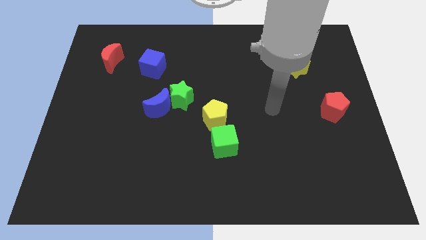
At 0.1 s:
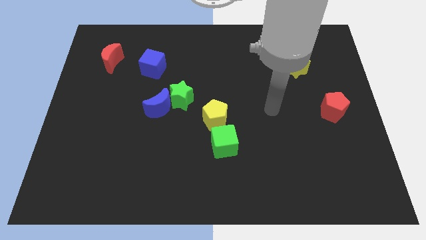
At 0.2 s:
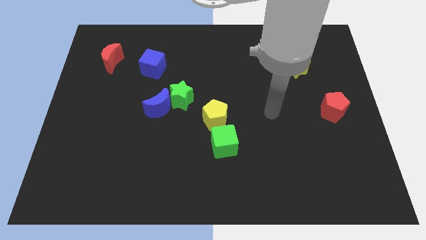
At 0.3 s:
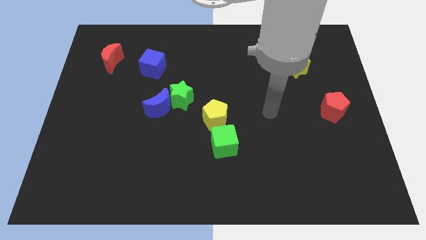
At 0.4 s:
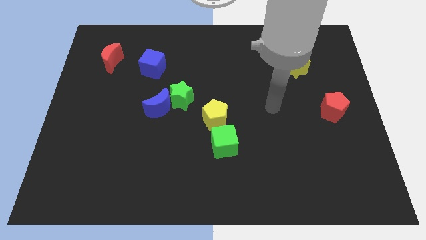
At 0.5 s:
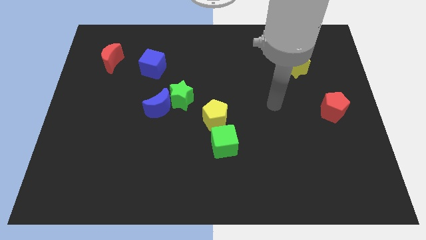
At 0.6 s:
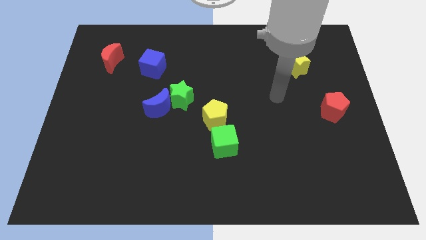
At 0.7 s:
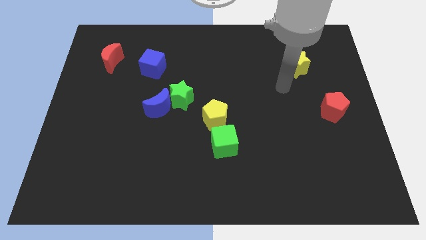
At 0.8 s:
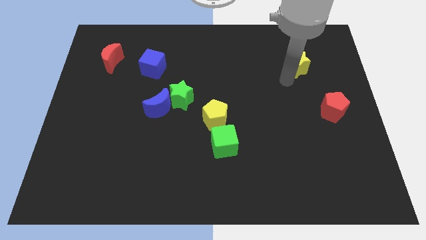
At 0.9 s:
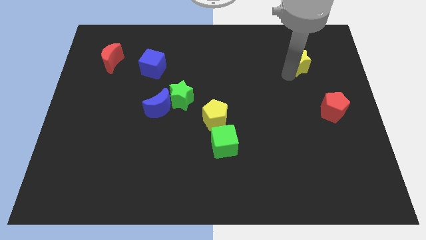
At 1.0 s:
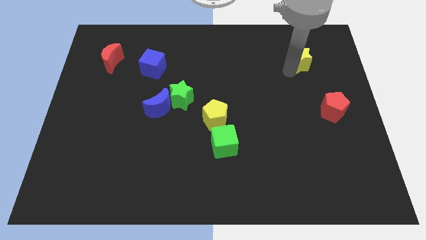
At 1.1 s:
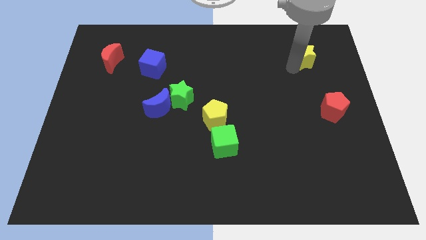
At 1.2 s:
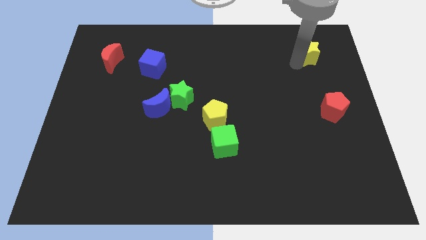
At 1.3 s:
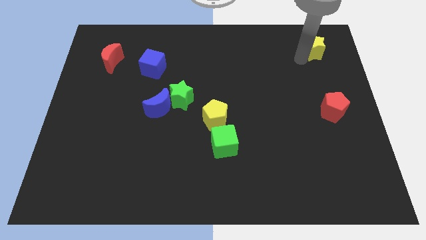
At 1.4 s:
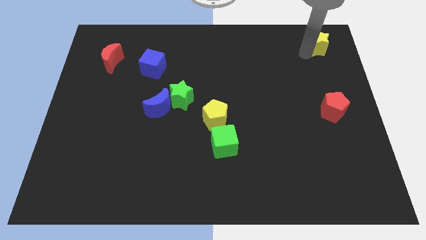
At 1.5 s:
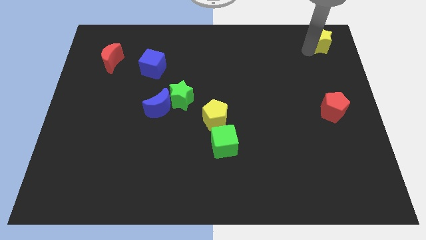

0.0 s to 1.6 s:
push the yellow star to the vertical top of the red pentagon

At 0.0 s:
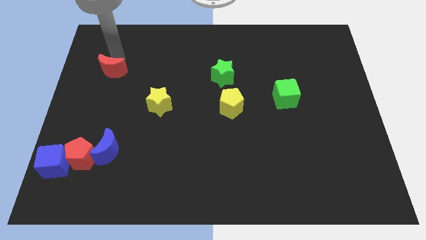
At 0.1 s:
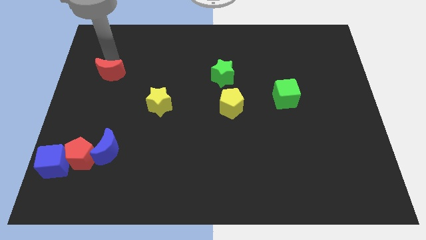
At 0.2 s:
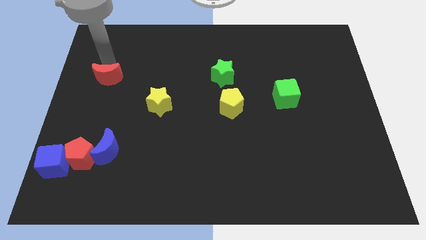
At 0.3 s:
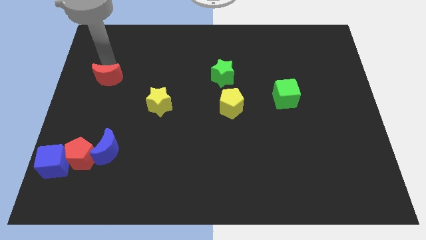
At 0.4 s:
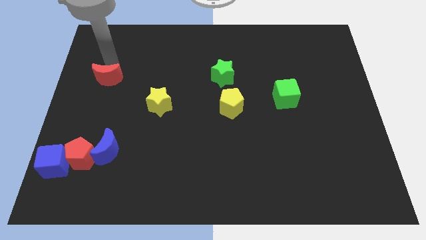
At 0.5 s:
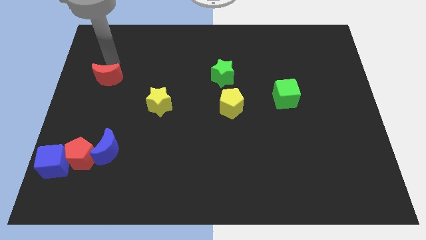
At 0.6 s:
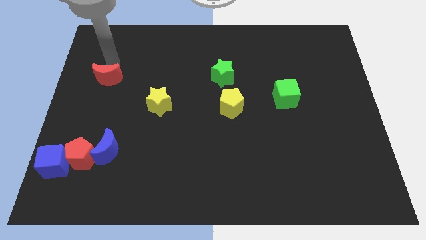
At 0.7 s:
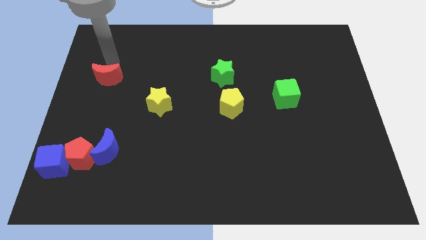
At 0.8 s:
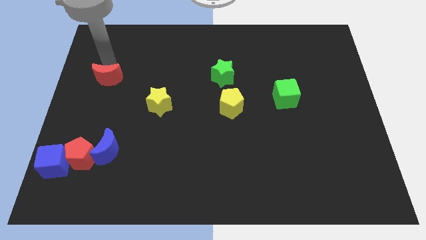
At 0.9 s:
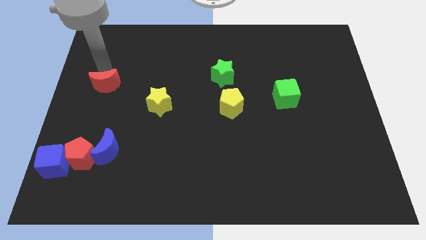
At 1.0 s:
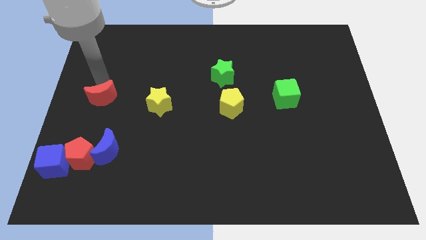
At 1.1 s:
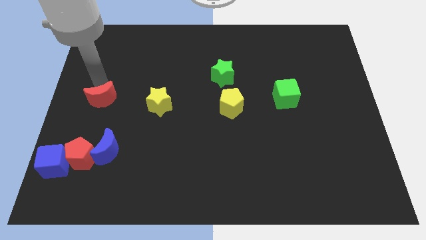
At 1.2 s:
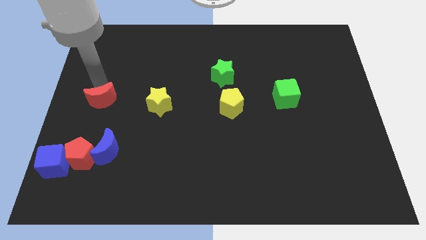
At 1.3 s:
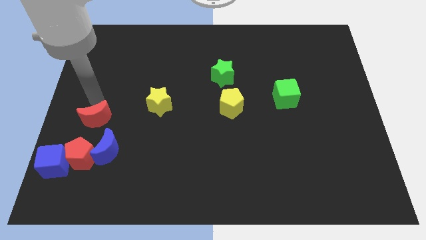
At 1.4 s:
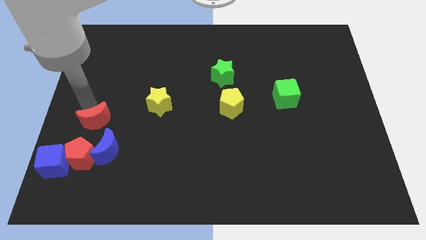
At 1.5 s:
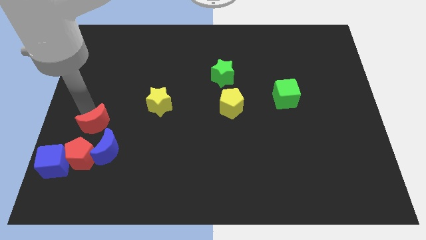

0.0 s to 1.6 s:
place the red moon above the blue moon

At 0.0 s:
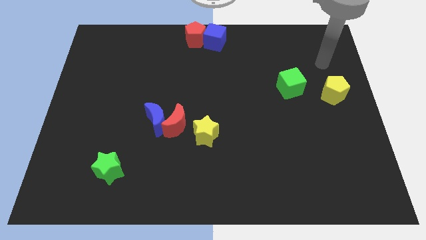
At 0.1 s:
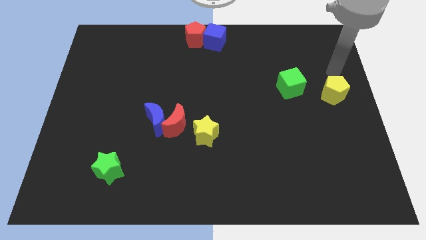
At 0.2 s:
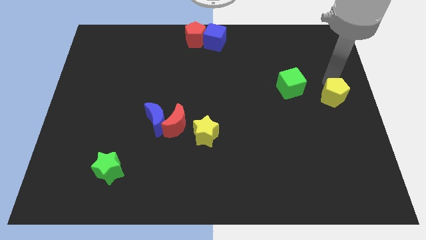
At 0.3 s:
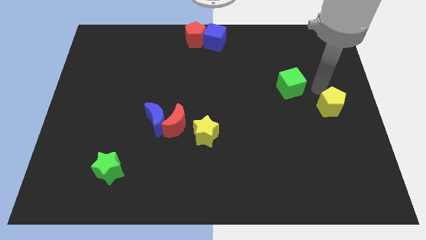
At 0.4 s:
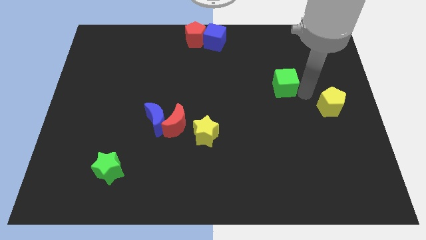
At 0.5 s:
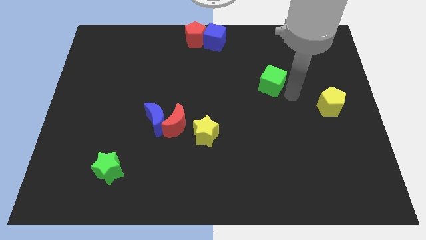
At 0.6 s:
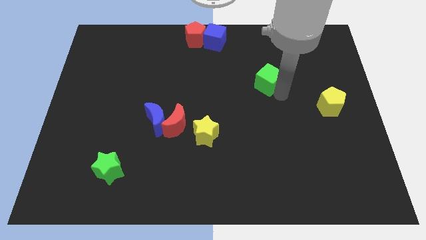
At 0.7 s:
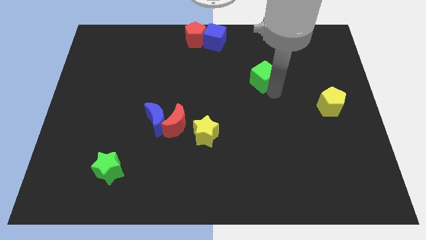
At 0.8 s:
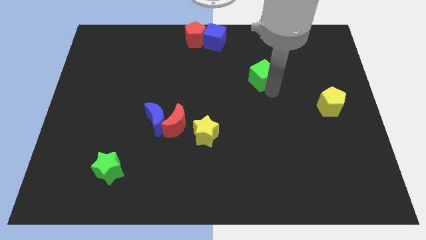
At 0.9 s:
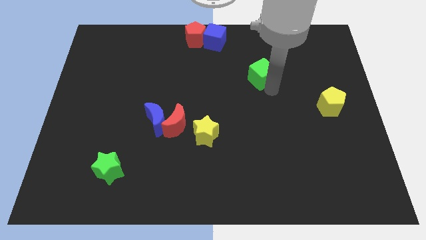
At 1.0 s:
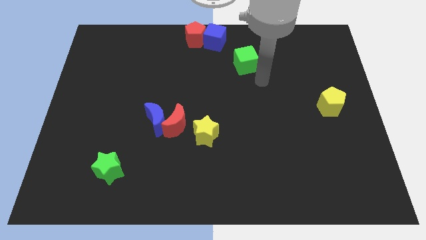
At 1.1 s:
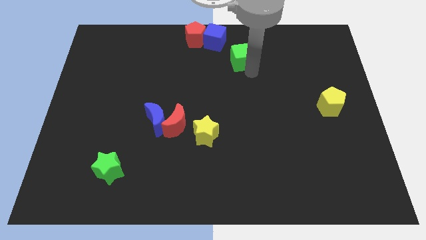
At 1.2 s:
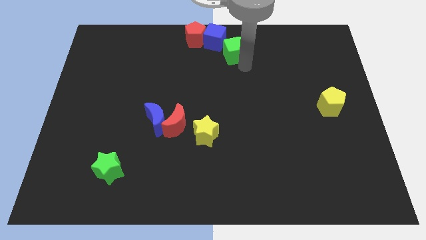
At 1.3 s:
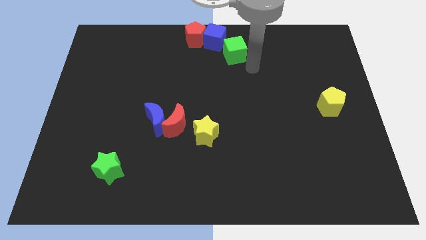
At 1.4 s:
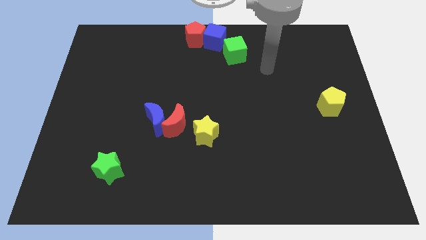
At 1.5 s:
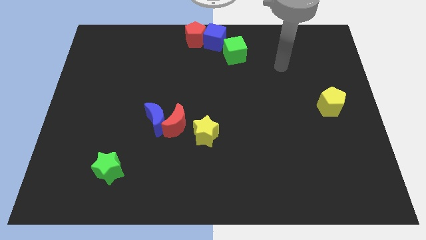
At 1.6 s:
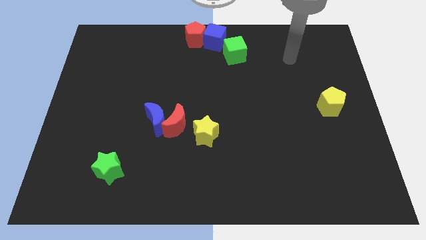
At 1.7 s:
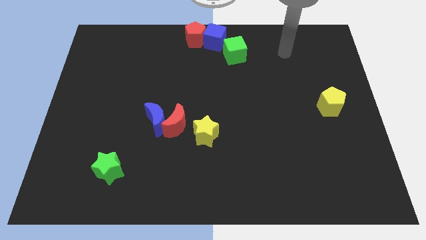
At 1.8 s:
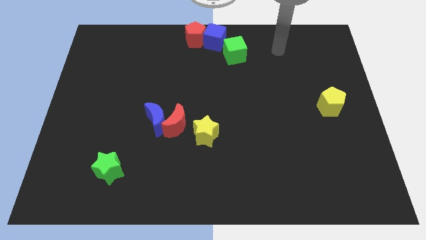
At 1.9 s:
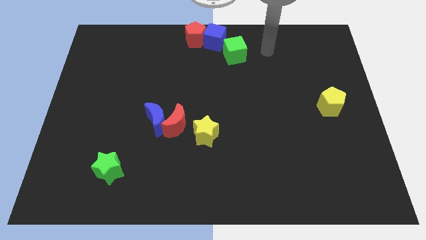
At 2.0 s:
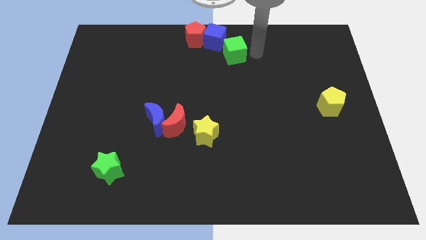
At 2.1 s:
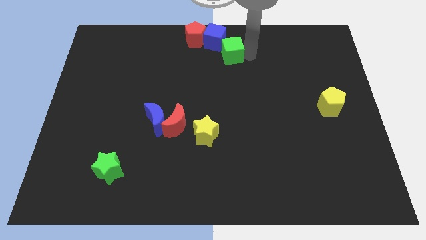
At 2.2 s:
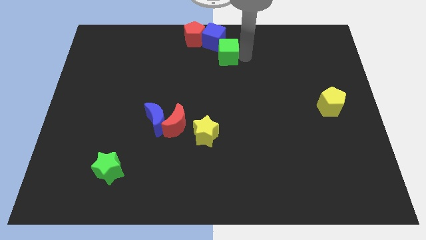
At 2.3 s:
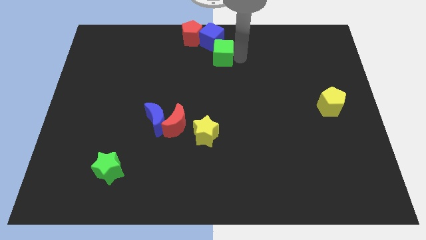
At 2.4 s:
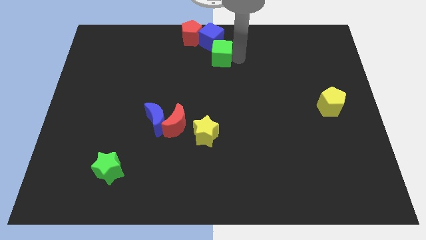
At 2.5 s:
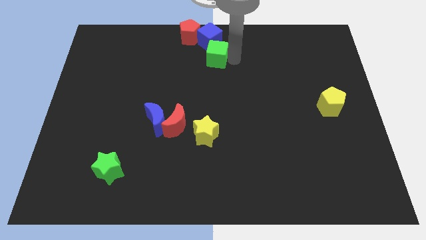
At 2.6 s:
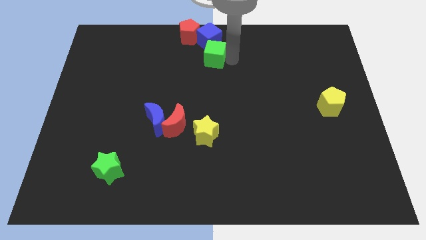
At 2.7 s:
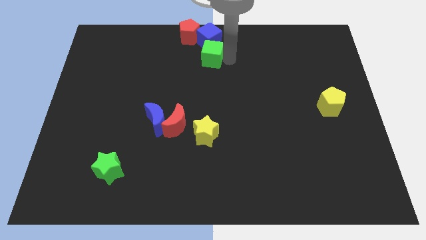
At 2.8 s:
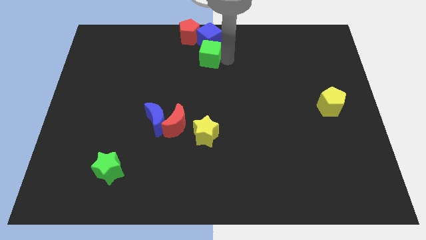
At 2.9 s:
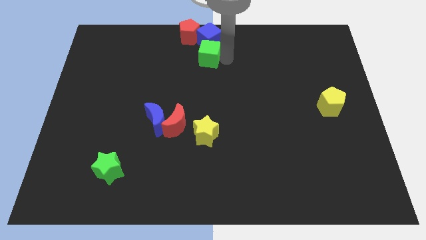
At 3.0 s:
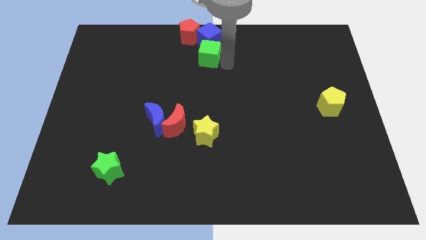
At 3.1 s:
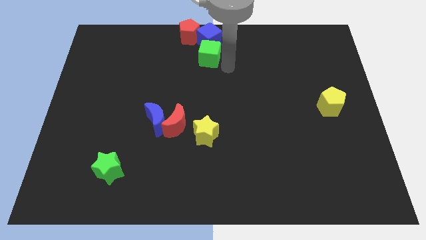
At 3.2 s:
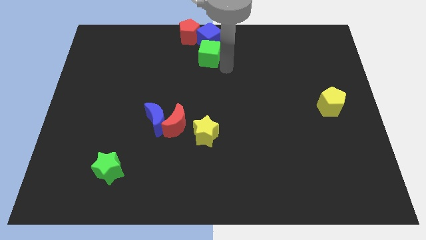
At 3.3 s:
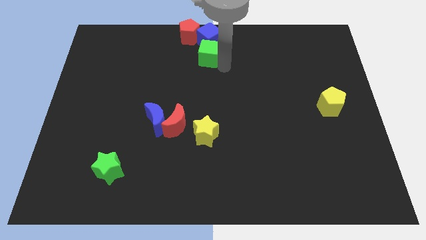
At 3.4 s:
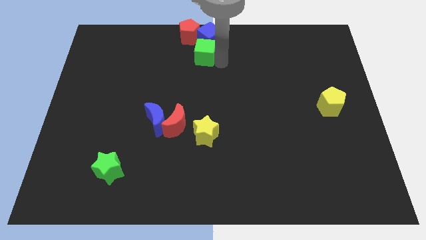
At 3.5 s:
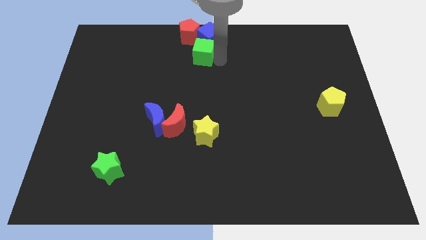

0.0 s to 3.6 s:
push the green cube into the blue cube

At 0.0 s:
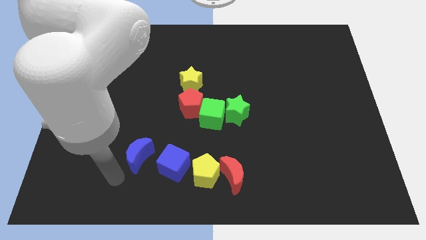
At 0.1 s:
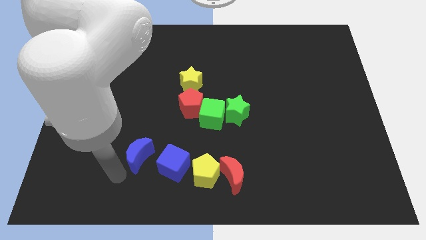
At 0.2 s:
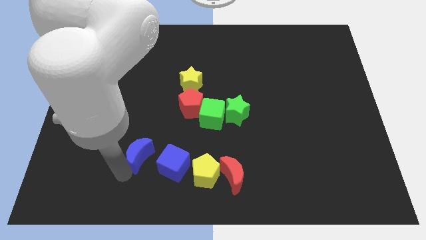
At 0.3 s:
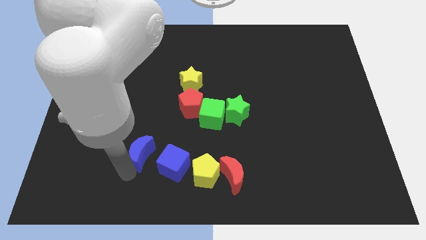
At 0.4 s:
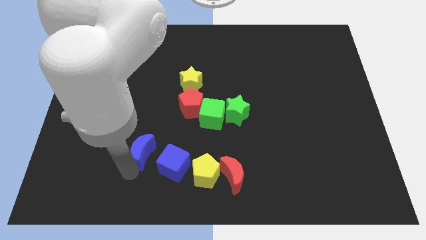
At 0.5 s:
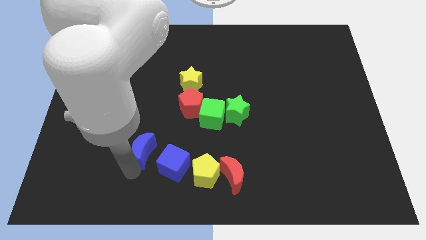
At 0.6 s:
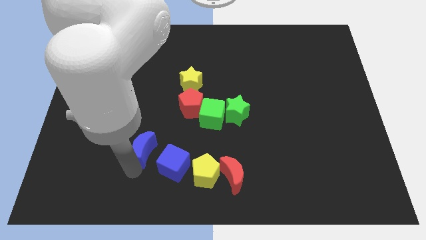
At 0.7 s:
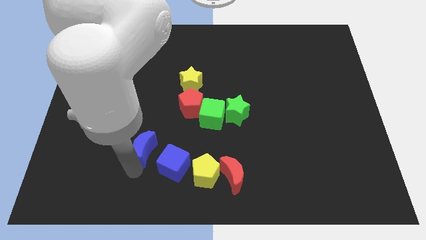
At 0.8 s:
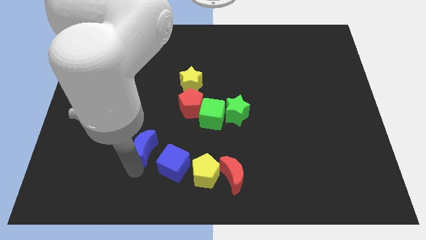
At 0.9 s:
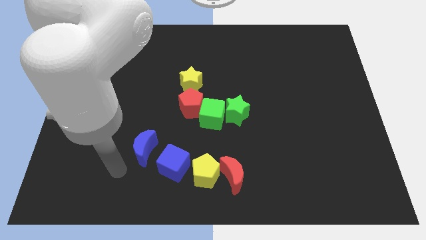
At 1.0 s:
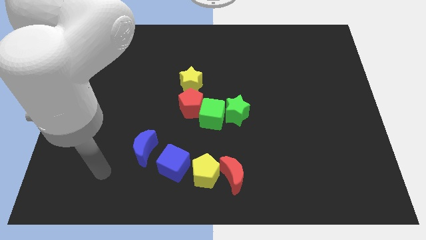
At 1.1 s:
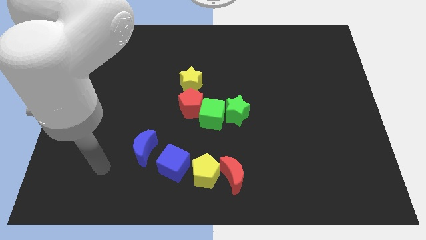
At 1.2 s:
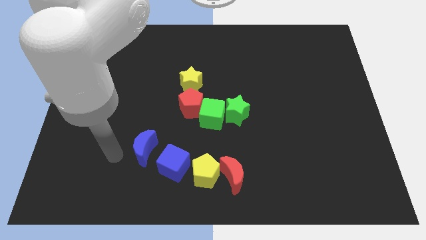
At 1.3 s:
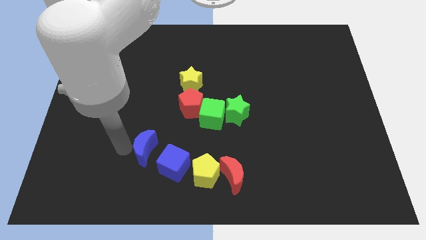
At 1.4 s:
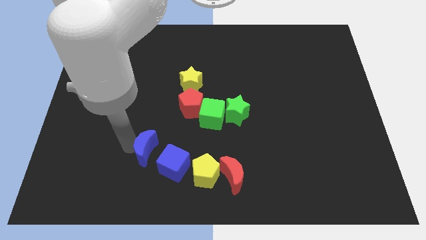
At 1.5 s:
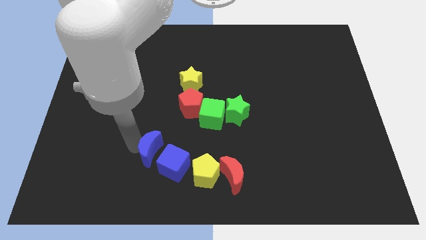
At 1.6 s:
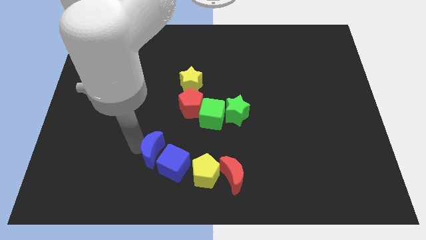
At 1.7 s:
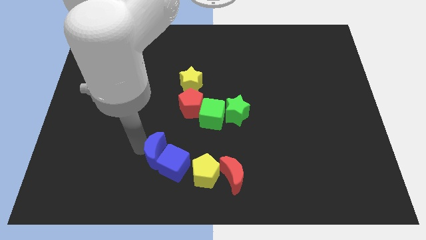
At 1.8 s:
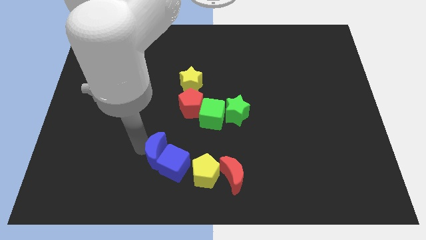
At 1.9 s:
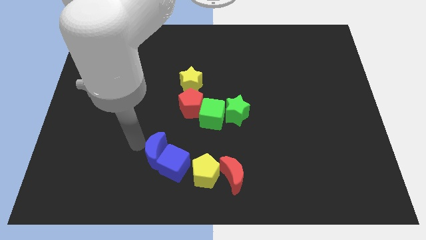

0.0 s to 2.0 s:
put the blue moon and blue cube together
